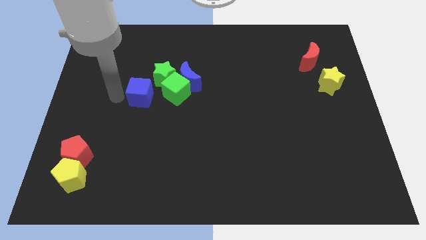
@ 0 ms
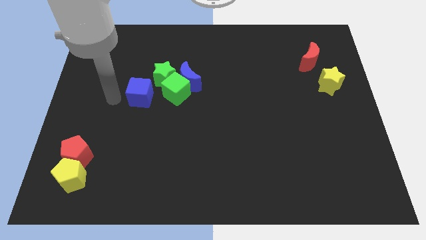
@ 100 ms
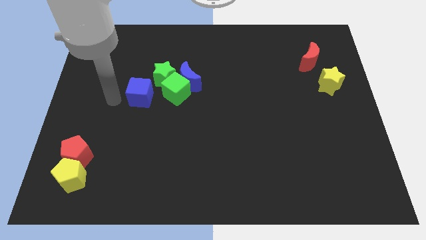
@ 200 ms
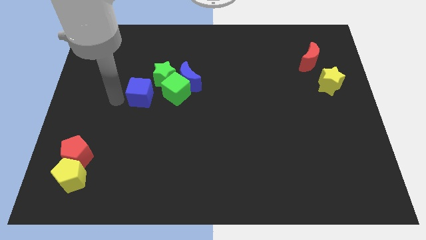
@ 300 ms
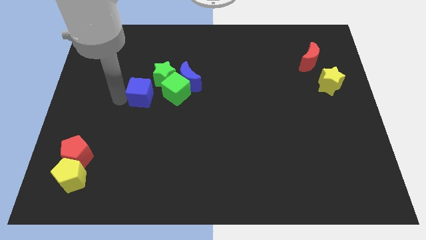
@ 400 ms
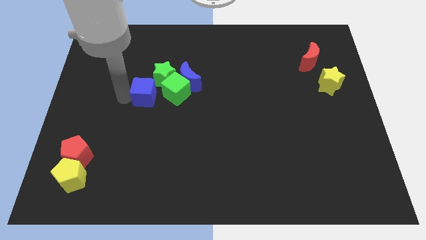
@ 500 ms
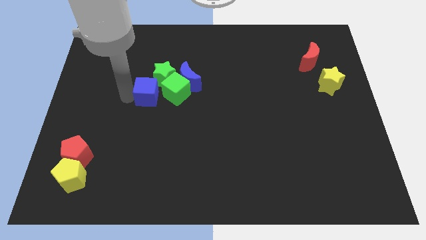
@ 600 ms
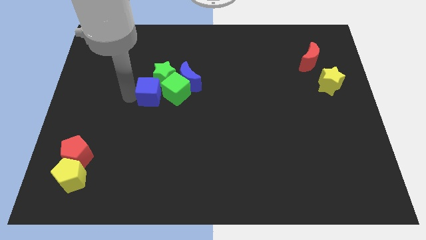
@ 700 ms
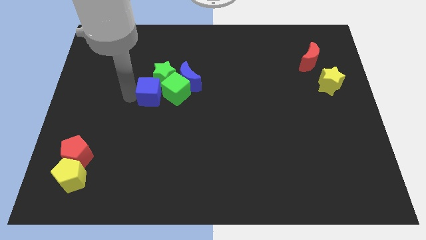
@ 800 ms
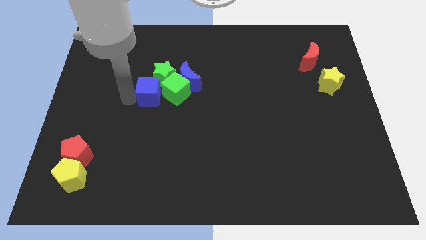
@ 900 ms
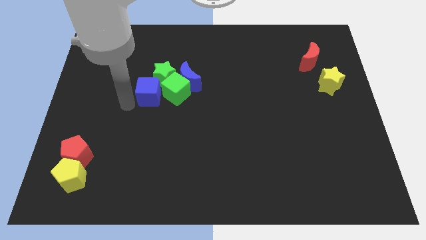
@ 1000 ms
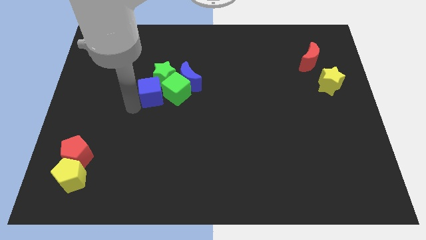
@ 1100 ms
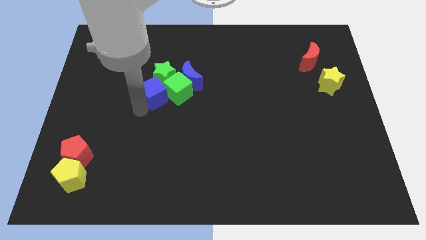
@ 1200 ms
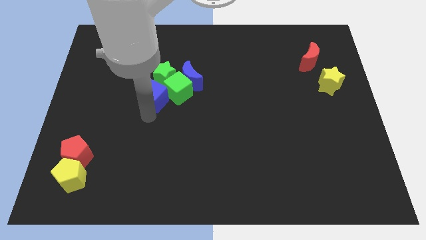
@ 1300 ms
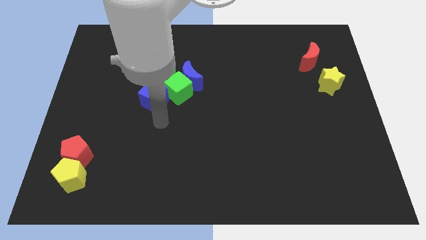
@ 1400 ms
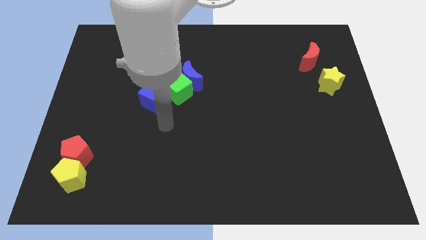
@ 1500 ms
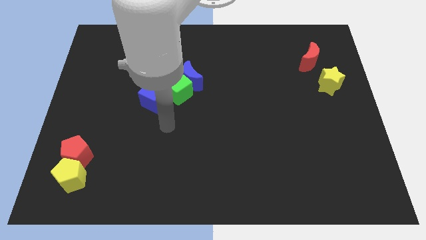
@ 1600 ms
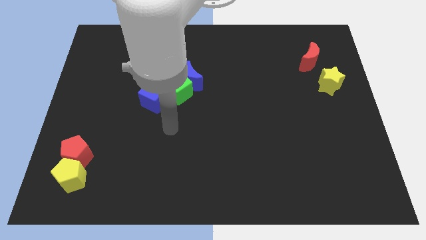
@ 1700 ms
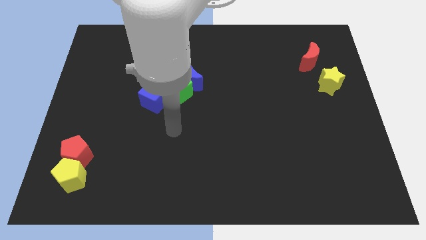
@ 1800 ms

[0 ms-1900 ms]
put the blue cube into green cube

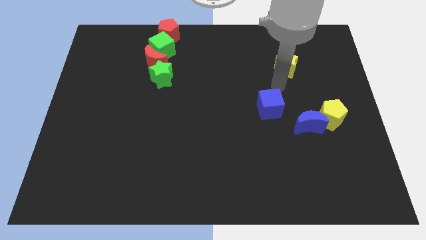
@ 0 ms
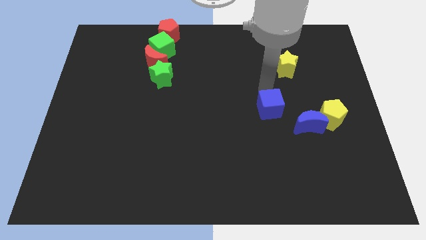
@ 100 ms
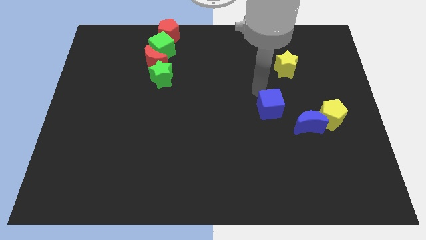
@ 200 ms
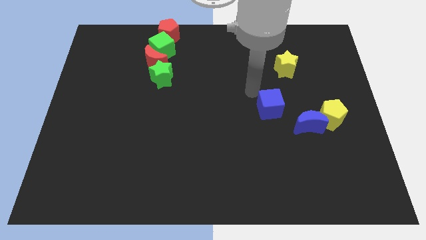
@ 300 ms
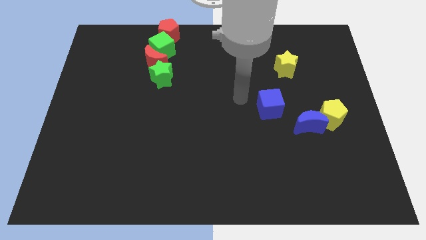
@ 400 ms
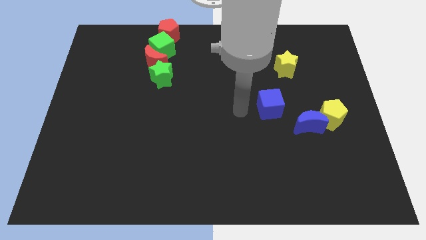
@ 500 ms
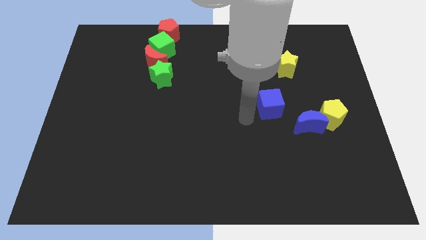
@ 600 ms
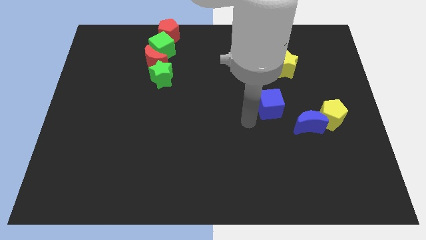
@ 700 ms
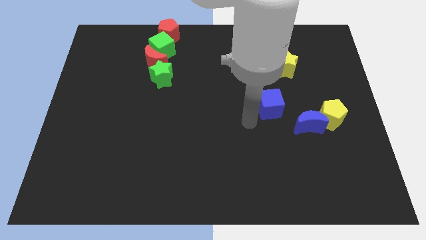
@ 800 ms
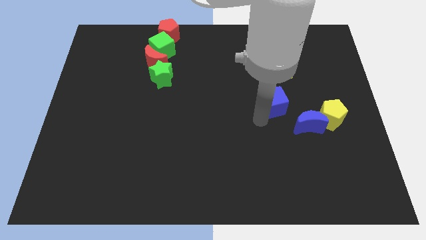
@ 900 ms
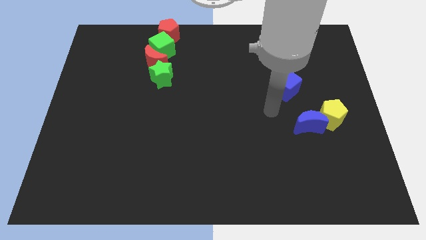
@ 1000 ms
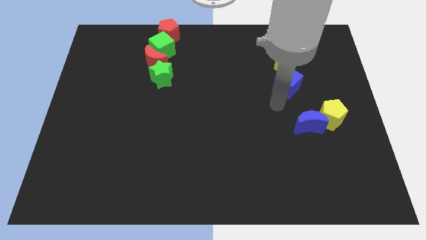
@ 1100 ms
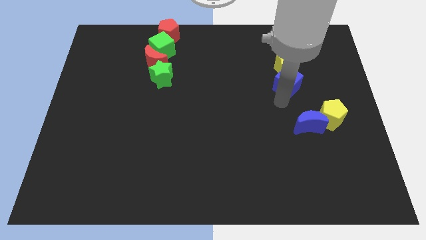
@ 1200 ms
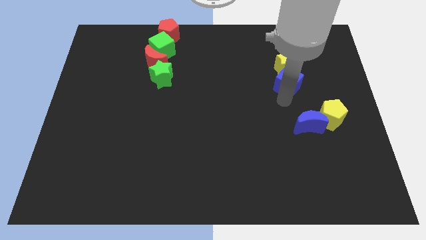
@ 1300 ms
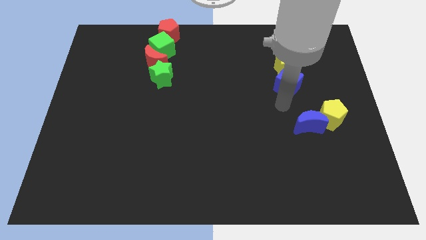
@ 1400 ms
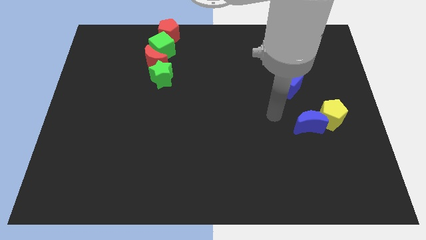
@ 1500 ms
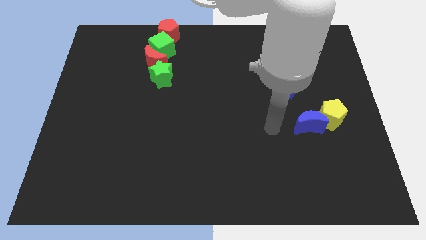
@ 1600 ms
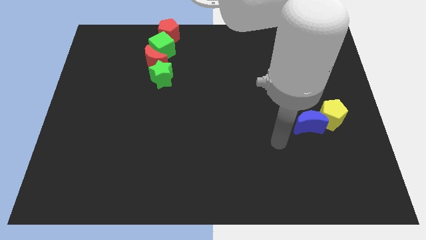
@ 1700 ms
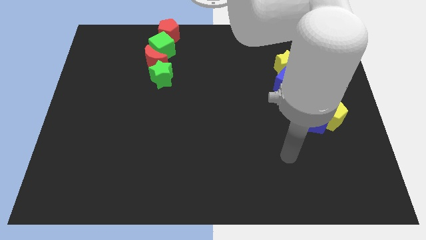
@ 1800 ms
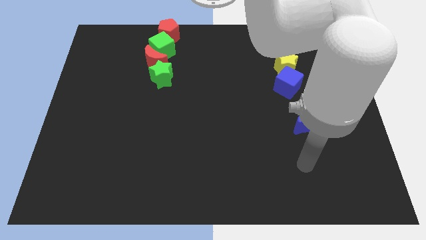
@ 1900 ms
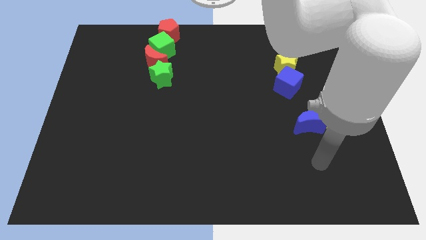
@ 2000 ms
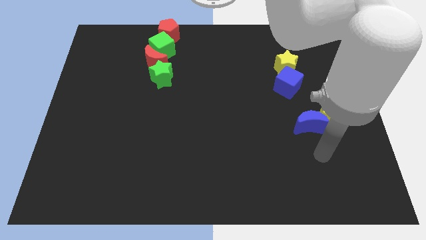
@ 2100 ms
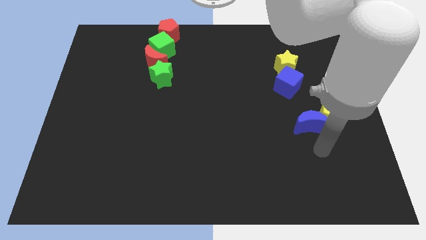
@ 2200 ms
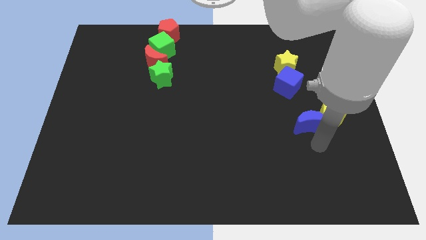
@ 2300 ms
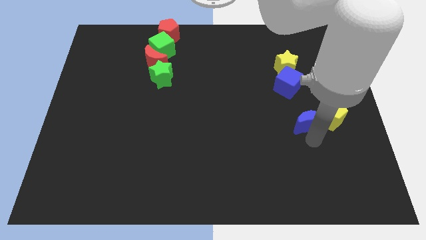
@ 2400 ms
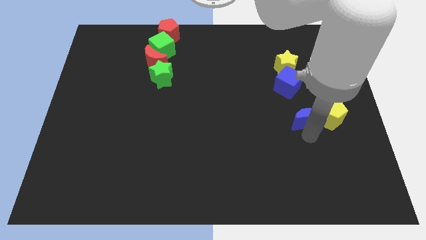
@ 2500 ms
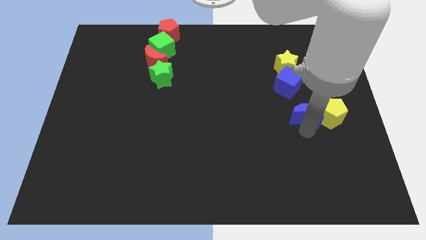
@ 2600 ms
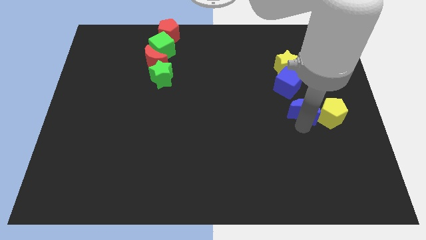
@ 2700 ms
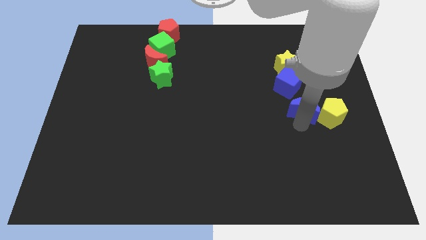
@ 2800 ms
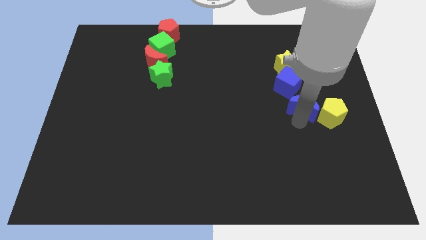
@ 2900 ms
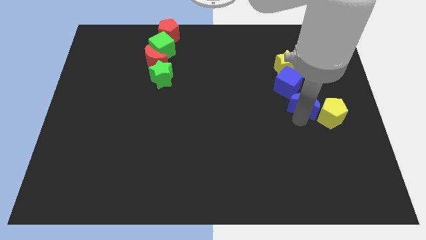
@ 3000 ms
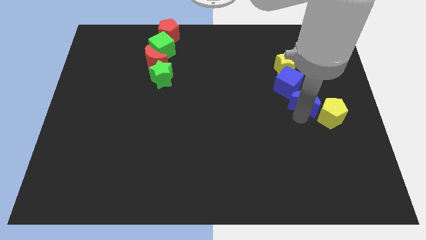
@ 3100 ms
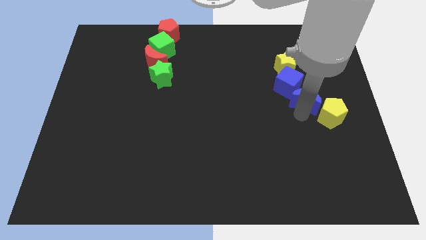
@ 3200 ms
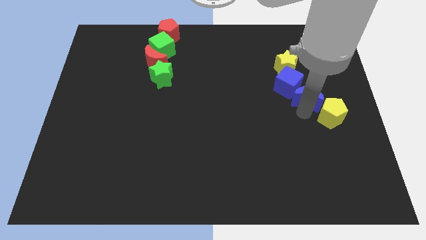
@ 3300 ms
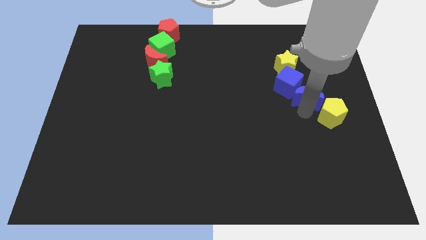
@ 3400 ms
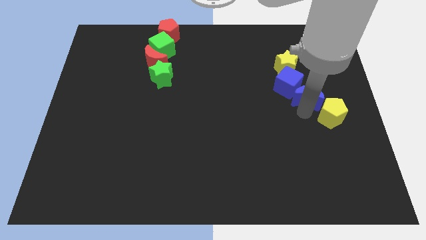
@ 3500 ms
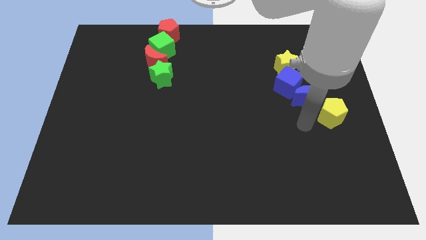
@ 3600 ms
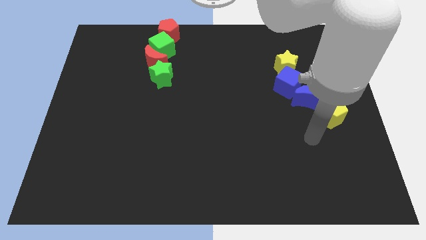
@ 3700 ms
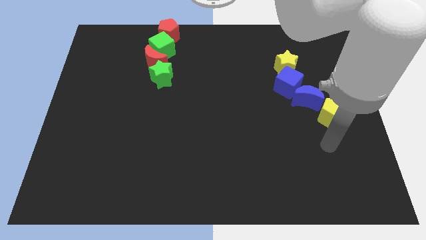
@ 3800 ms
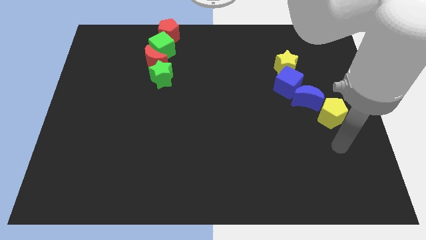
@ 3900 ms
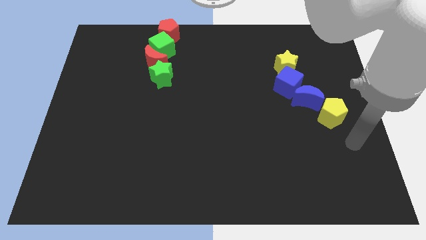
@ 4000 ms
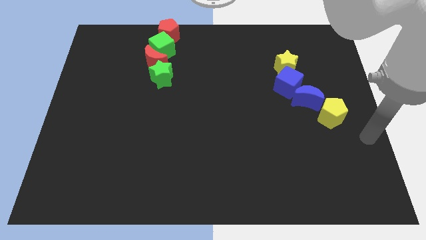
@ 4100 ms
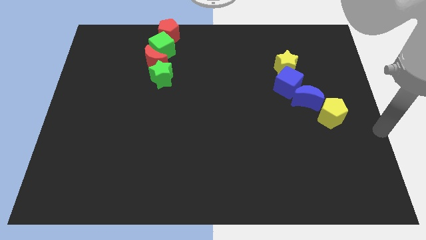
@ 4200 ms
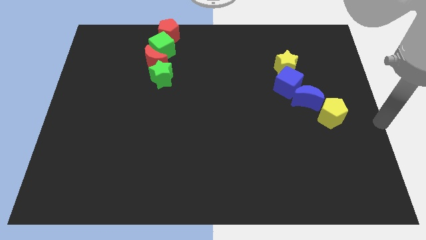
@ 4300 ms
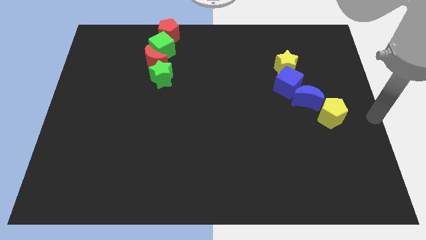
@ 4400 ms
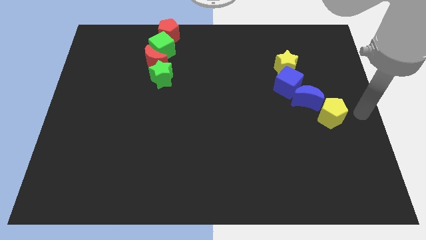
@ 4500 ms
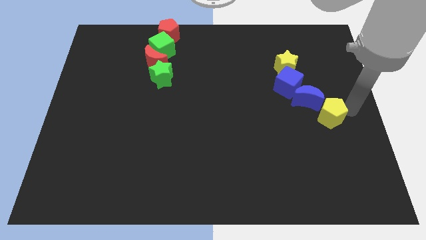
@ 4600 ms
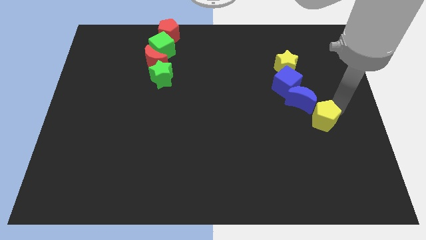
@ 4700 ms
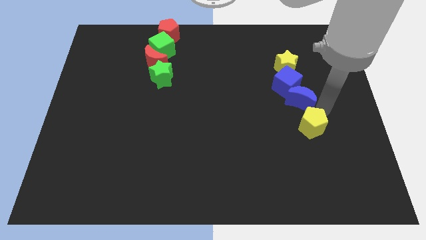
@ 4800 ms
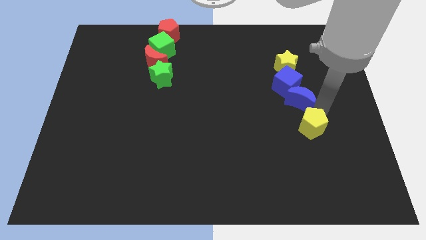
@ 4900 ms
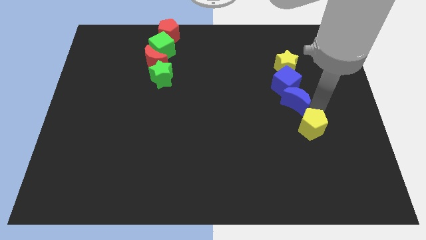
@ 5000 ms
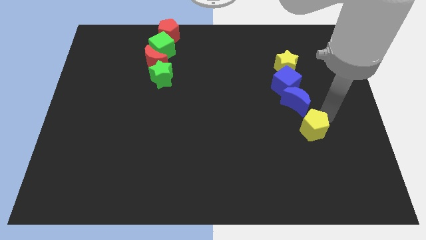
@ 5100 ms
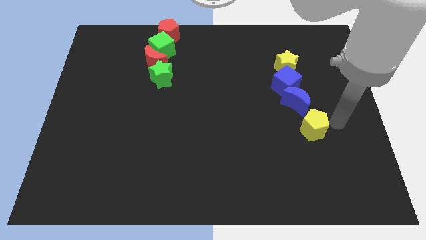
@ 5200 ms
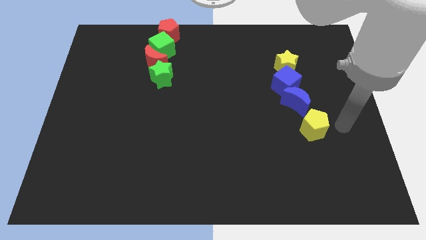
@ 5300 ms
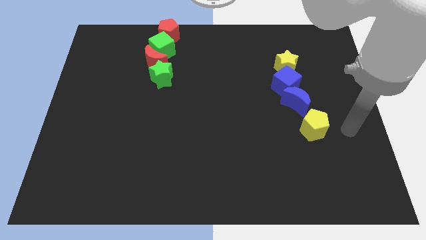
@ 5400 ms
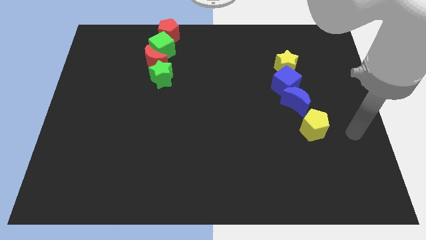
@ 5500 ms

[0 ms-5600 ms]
adjust blue blocks and the yellow blocks to form a diagonal line

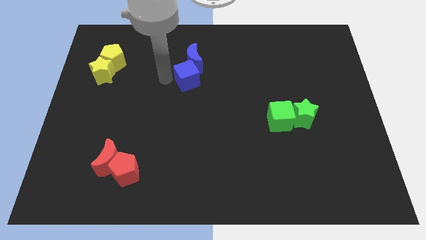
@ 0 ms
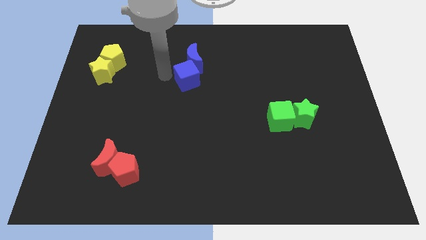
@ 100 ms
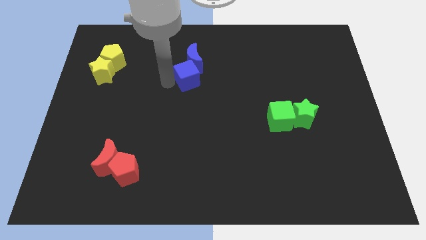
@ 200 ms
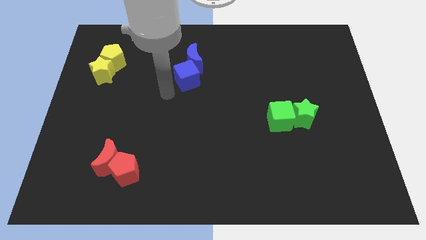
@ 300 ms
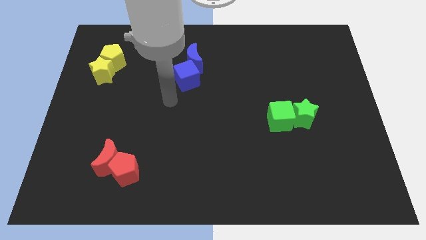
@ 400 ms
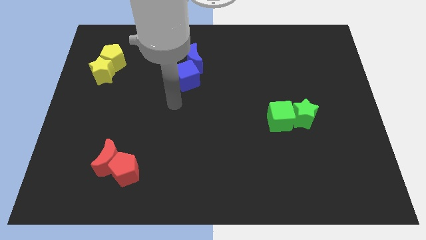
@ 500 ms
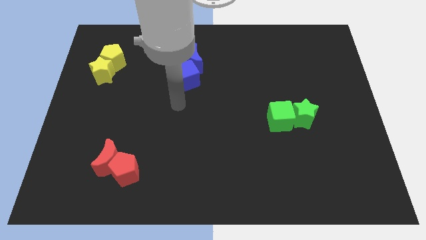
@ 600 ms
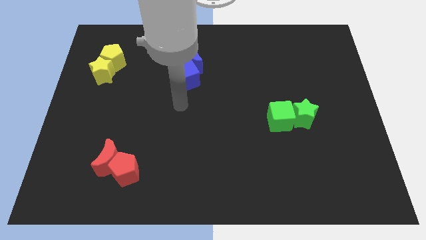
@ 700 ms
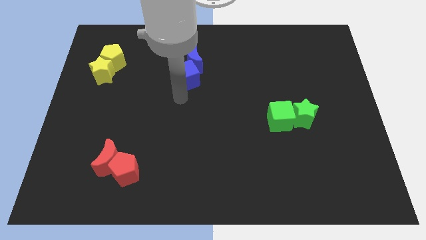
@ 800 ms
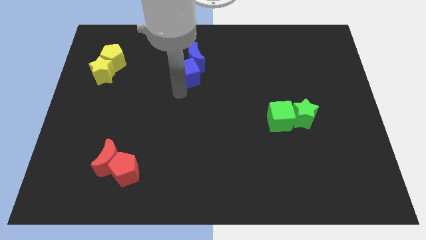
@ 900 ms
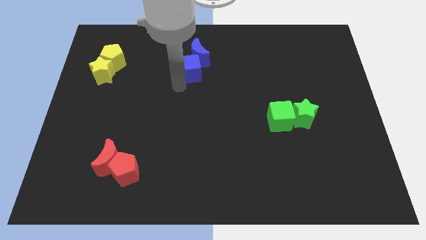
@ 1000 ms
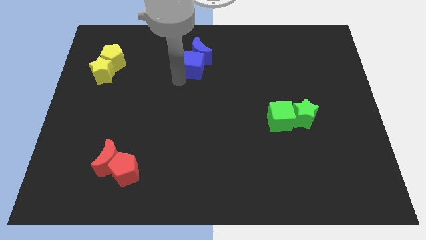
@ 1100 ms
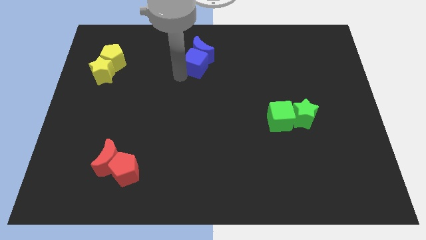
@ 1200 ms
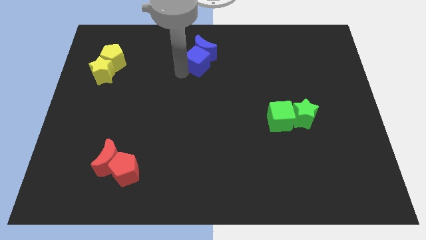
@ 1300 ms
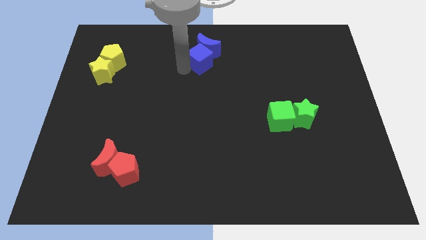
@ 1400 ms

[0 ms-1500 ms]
move the blue cube and blue crescent towards the top center
